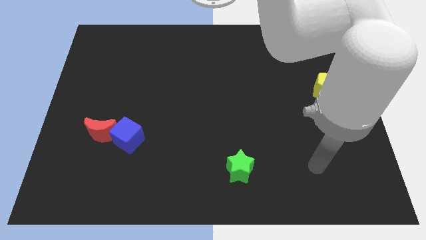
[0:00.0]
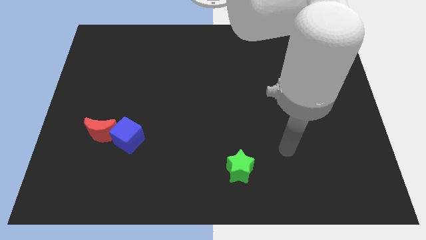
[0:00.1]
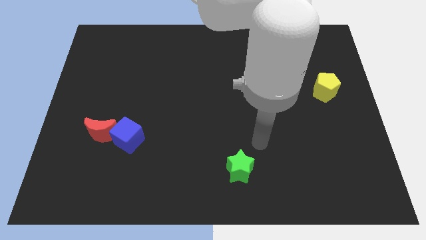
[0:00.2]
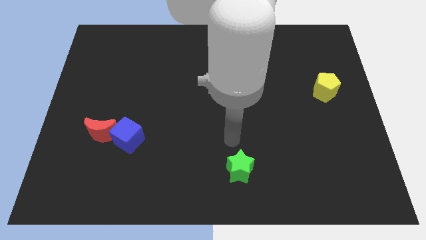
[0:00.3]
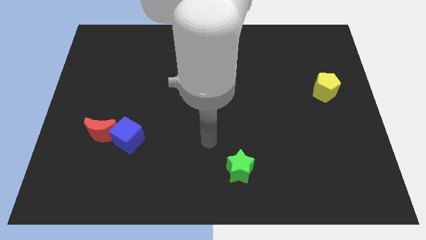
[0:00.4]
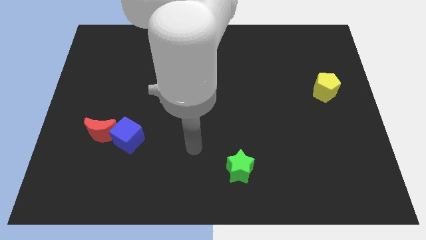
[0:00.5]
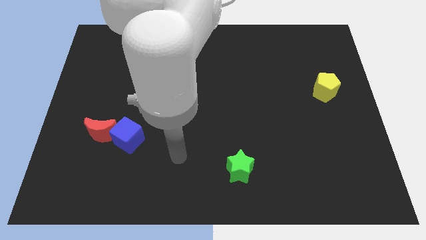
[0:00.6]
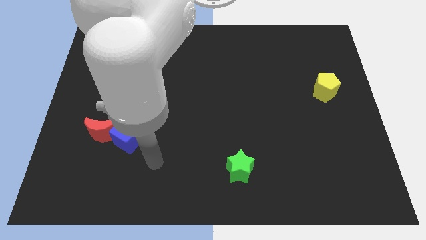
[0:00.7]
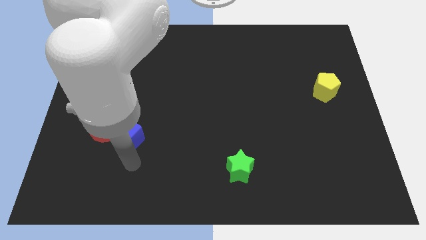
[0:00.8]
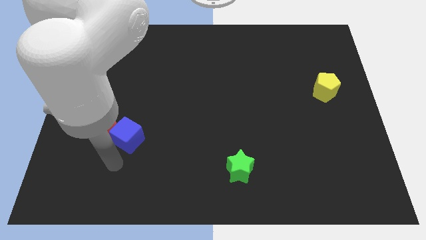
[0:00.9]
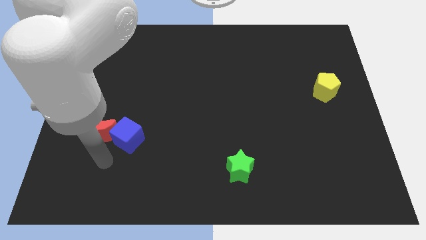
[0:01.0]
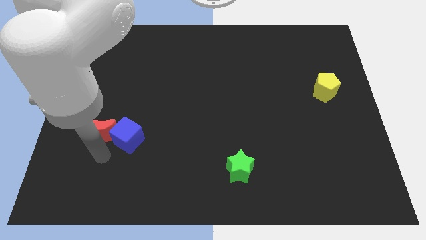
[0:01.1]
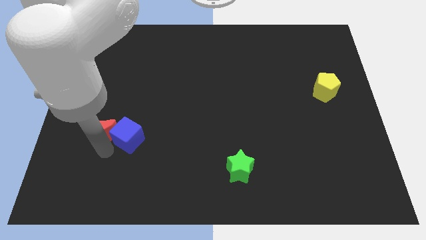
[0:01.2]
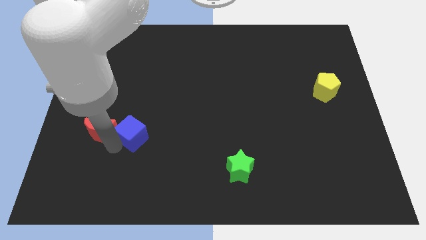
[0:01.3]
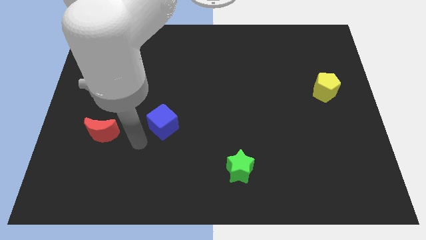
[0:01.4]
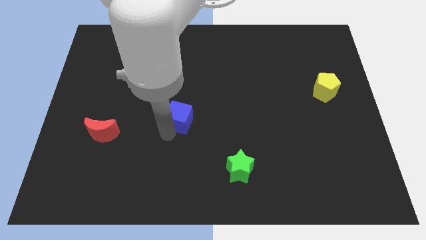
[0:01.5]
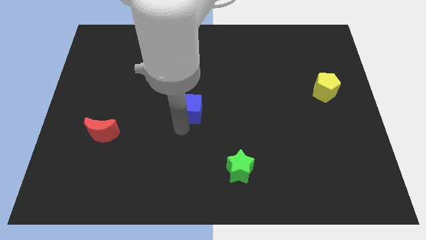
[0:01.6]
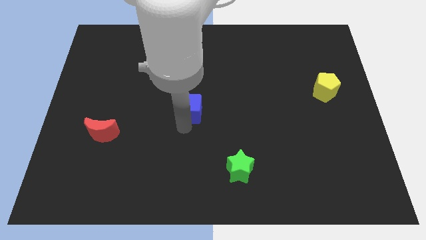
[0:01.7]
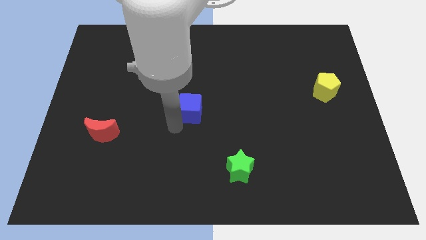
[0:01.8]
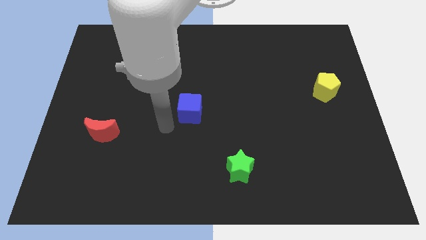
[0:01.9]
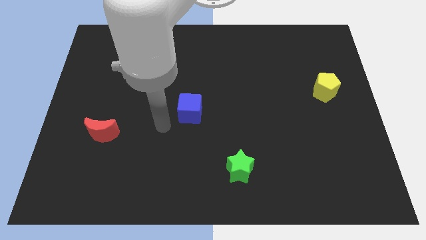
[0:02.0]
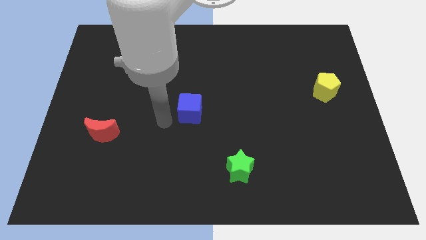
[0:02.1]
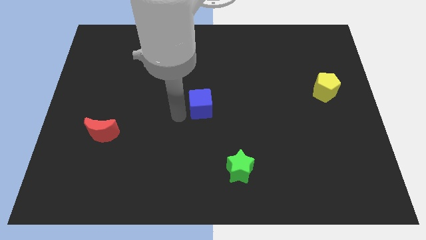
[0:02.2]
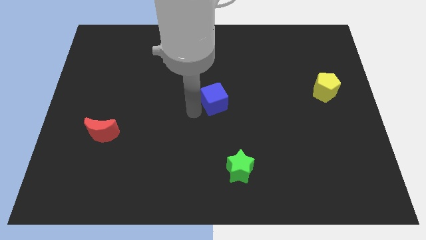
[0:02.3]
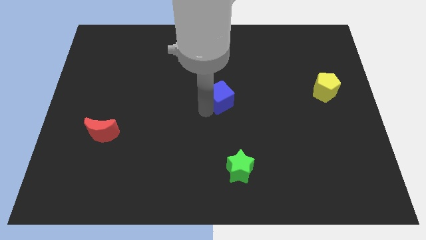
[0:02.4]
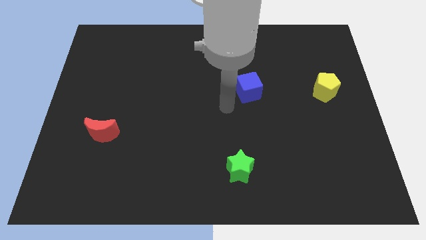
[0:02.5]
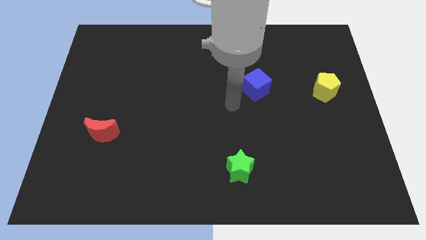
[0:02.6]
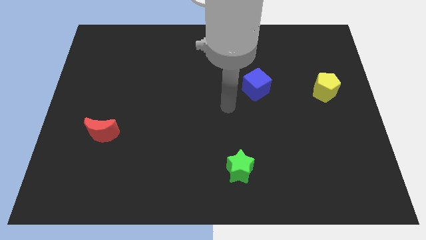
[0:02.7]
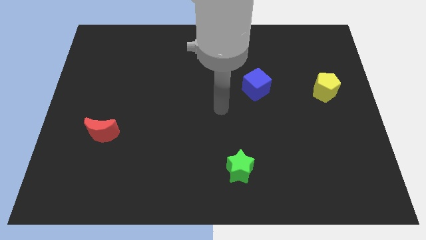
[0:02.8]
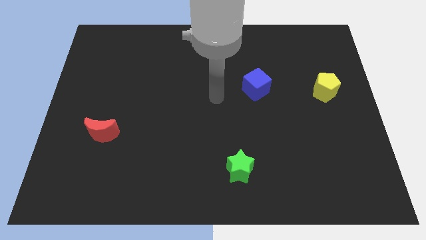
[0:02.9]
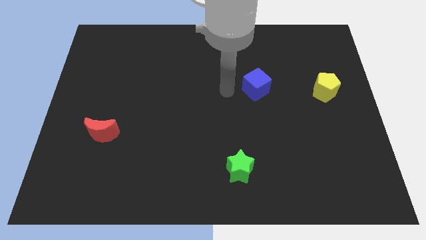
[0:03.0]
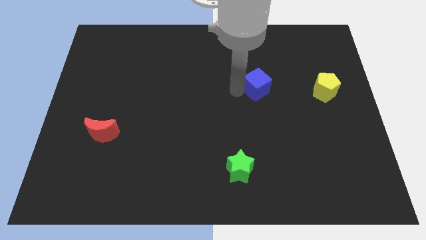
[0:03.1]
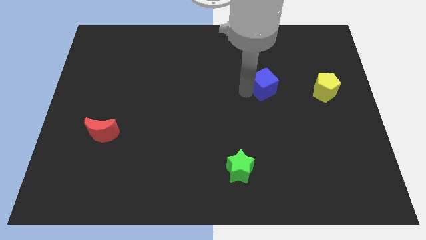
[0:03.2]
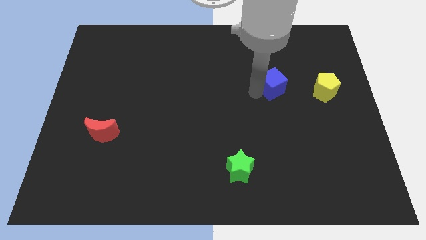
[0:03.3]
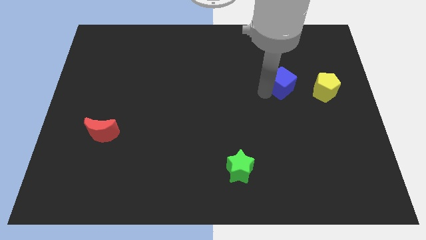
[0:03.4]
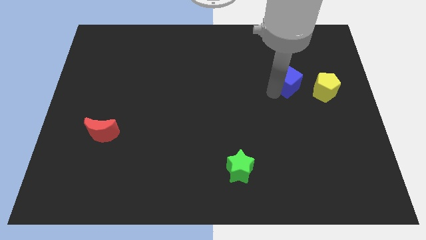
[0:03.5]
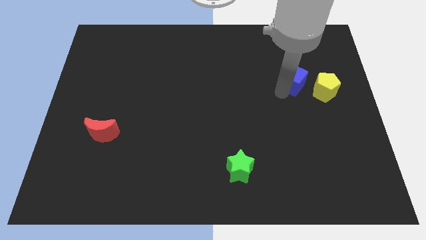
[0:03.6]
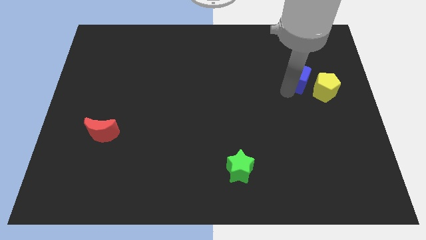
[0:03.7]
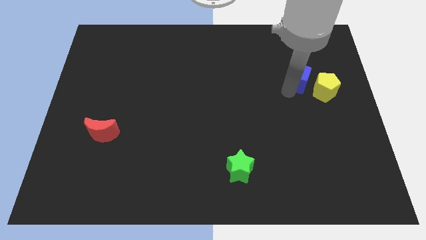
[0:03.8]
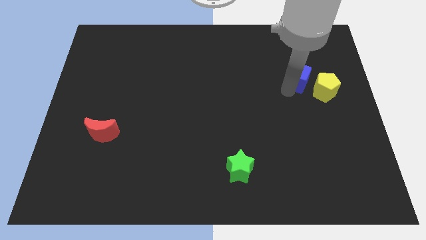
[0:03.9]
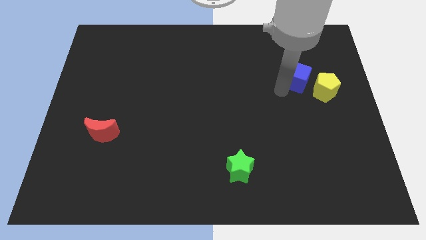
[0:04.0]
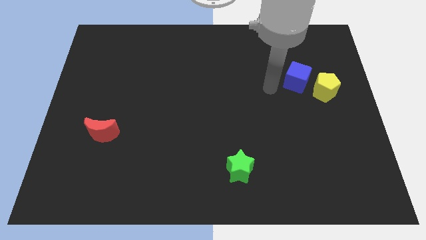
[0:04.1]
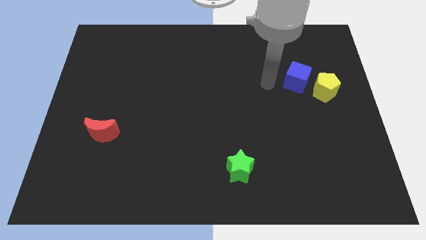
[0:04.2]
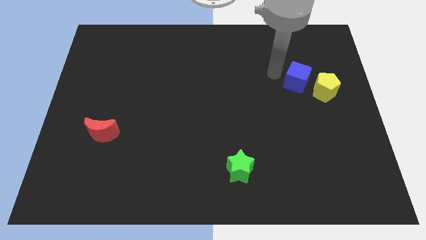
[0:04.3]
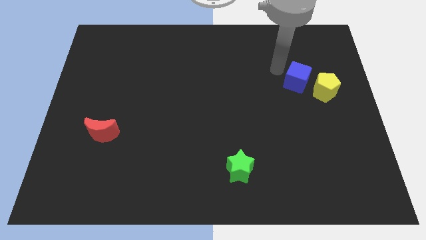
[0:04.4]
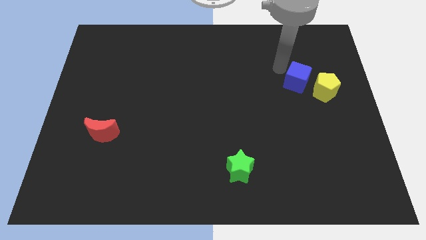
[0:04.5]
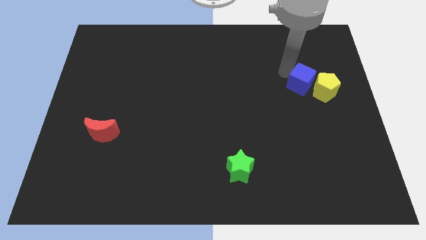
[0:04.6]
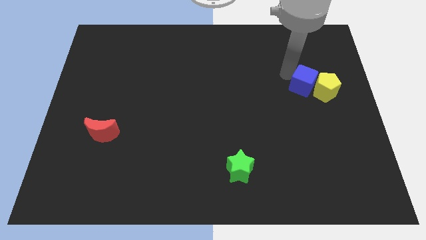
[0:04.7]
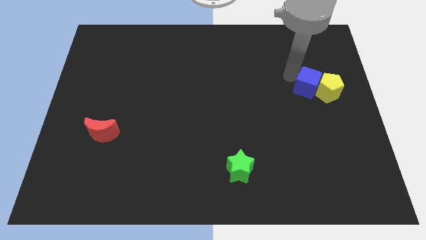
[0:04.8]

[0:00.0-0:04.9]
move the cube to the yellow block

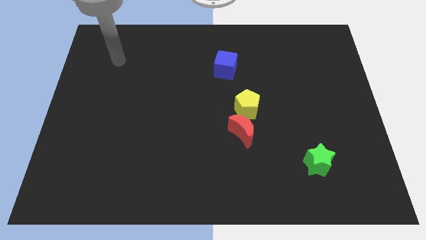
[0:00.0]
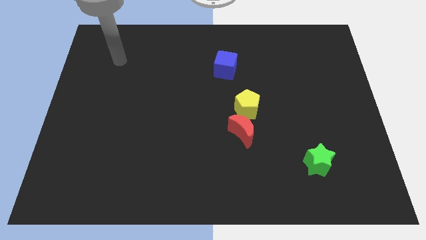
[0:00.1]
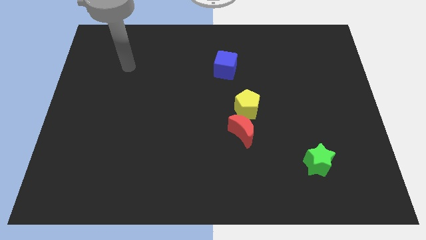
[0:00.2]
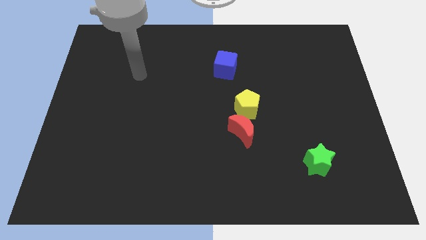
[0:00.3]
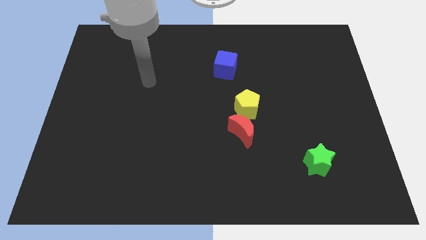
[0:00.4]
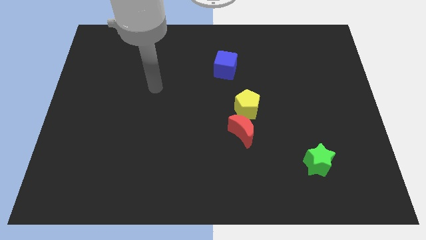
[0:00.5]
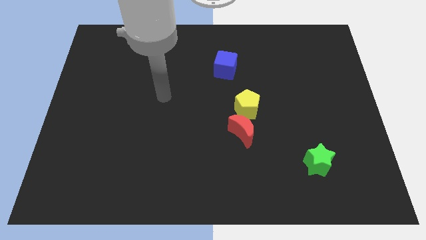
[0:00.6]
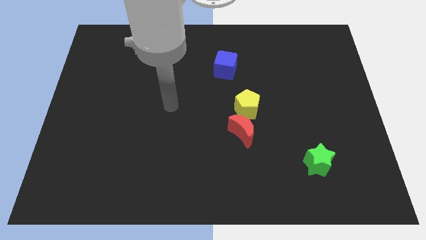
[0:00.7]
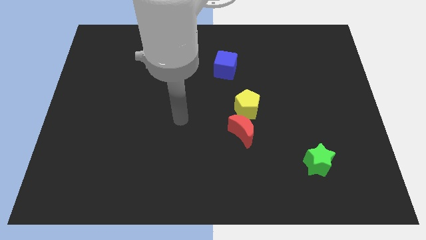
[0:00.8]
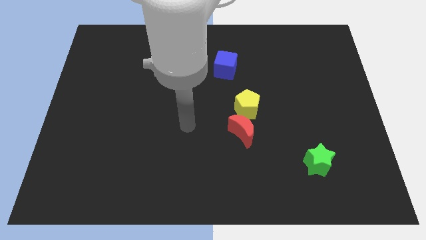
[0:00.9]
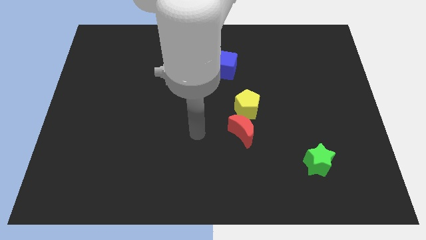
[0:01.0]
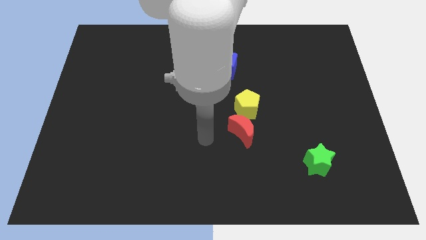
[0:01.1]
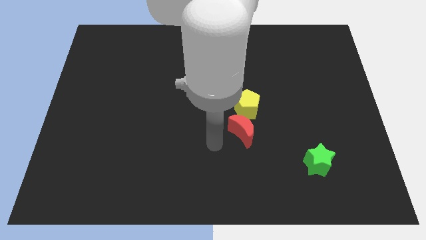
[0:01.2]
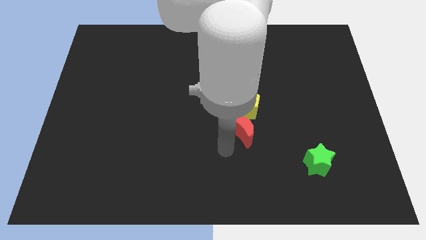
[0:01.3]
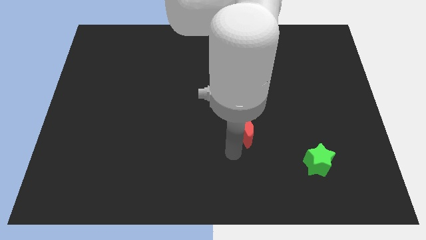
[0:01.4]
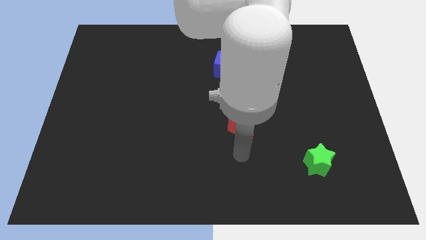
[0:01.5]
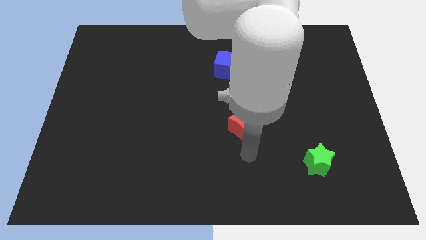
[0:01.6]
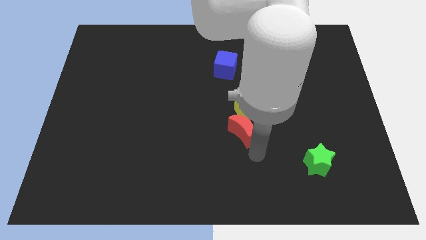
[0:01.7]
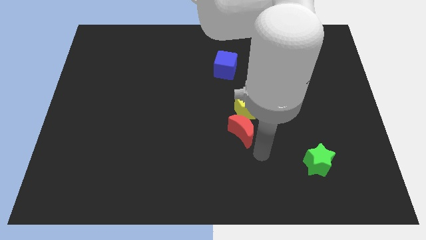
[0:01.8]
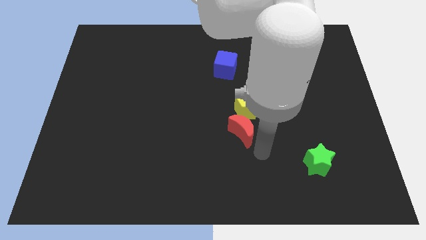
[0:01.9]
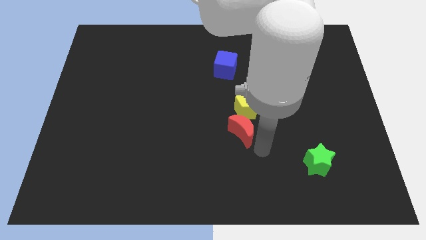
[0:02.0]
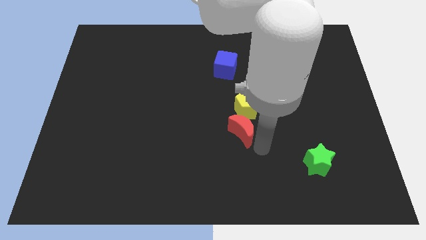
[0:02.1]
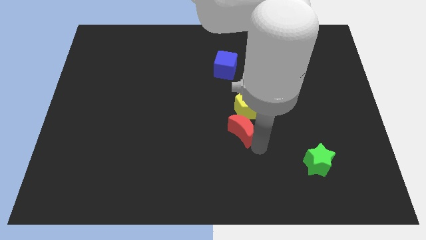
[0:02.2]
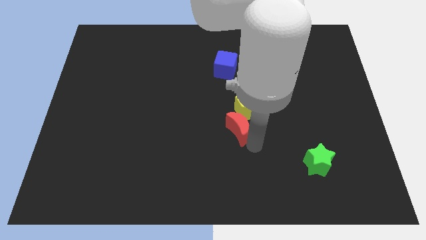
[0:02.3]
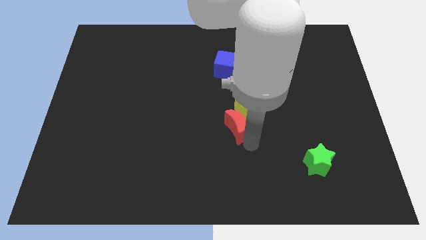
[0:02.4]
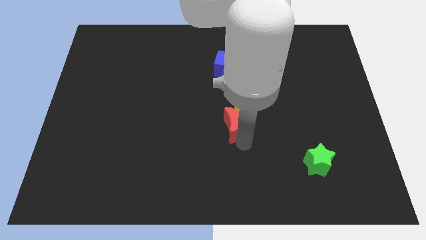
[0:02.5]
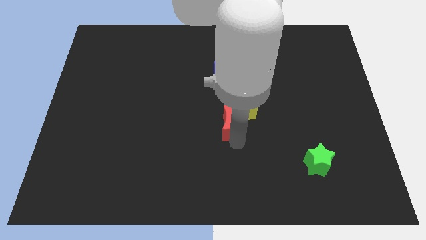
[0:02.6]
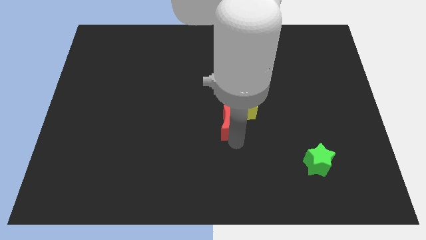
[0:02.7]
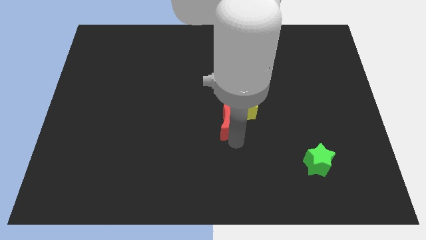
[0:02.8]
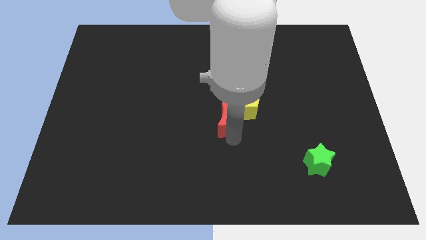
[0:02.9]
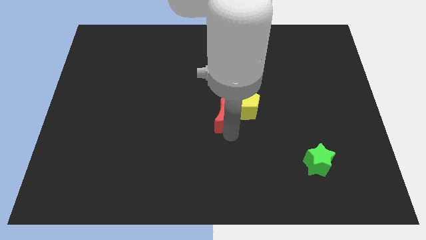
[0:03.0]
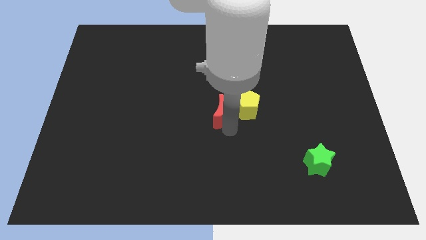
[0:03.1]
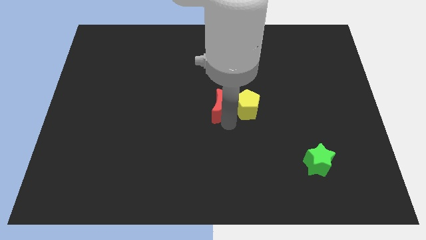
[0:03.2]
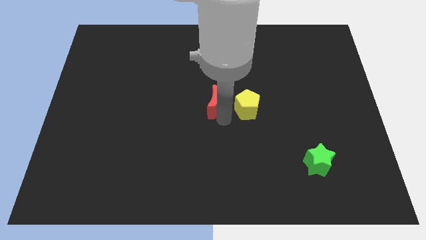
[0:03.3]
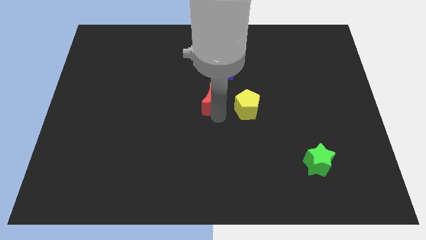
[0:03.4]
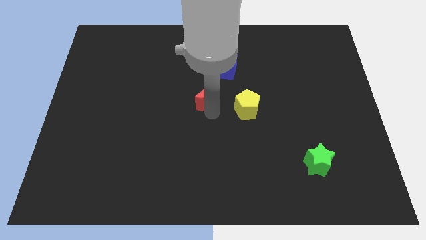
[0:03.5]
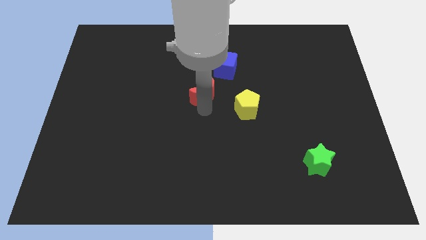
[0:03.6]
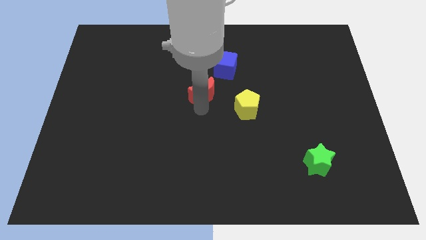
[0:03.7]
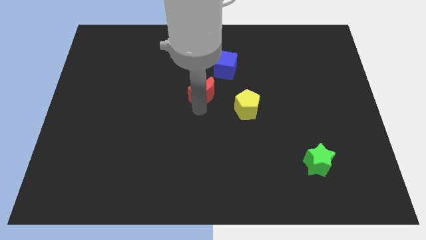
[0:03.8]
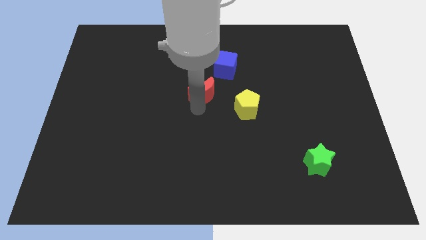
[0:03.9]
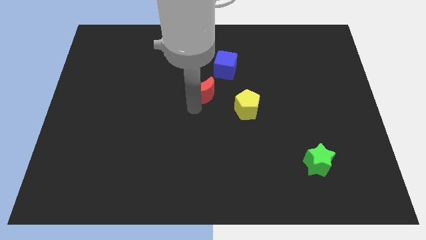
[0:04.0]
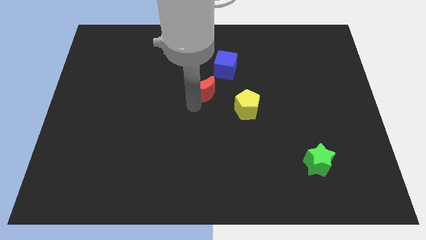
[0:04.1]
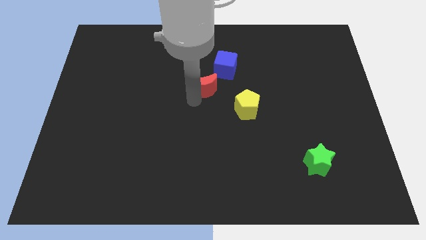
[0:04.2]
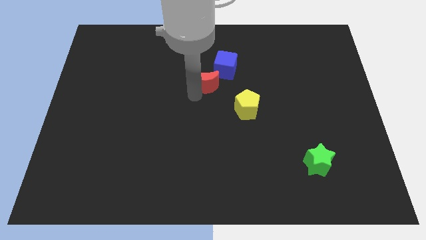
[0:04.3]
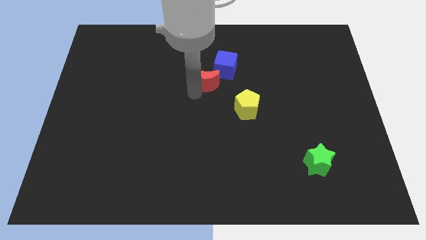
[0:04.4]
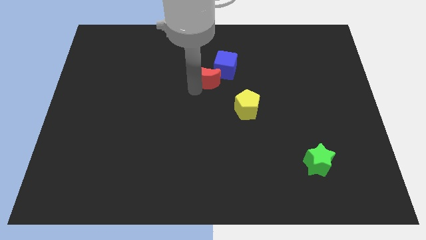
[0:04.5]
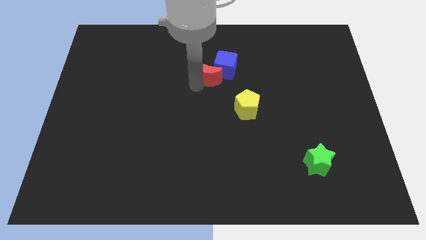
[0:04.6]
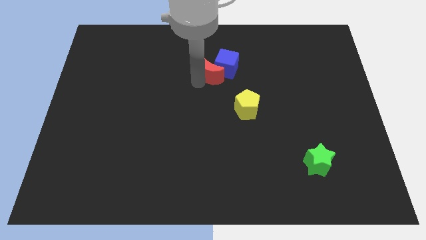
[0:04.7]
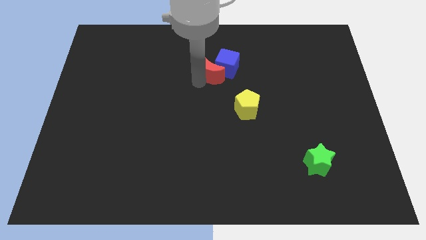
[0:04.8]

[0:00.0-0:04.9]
put the red block next to the blue block
